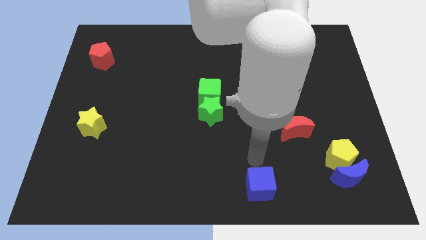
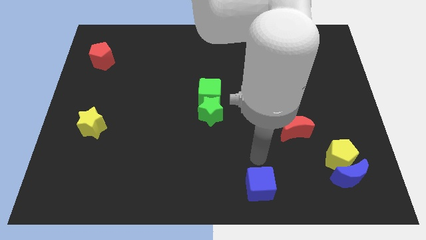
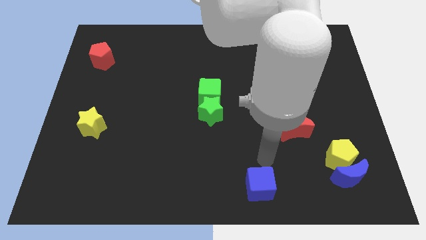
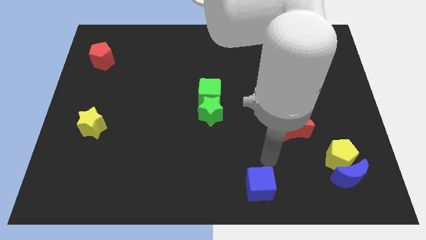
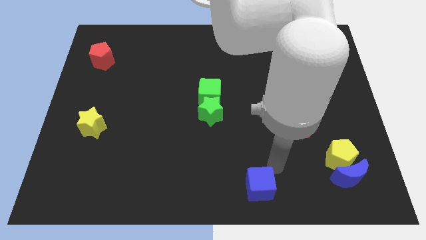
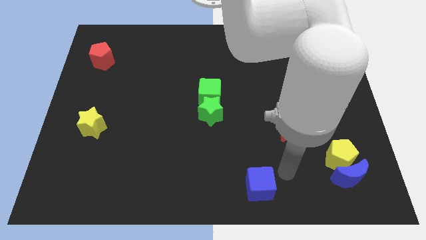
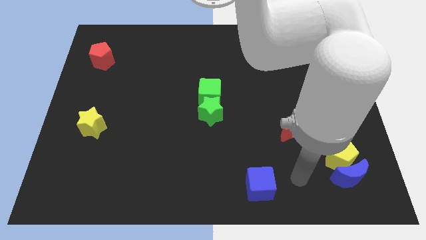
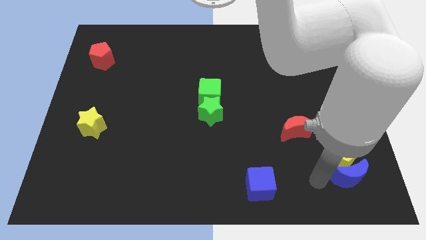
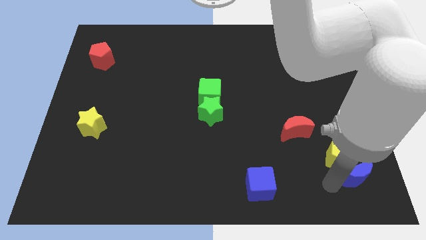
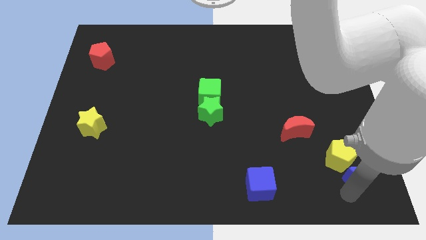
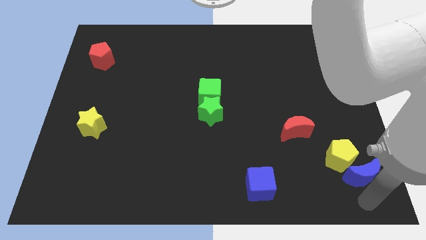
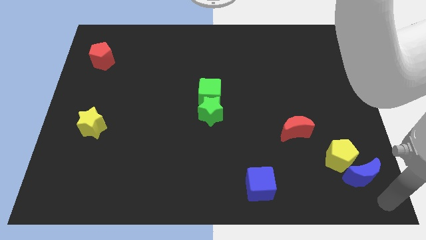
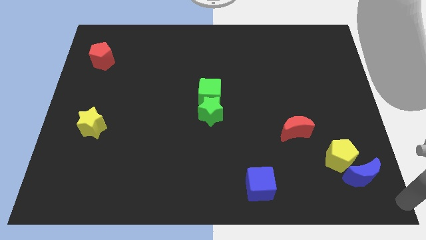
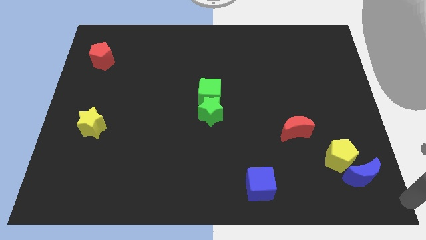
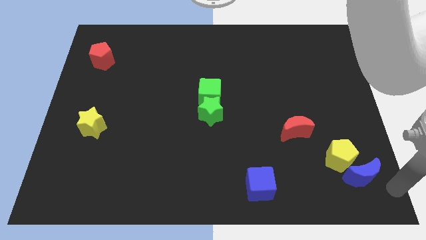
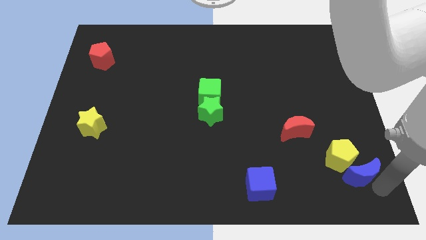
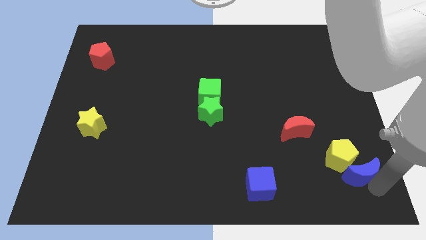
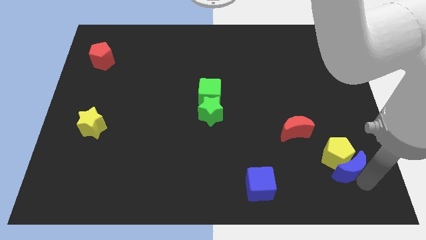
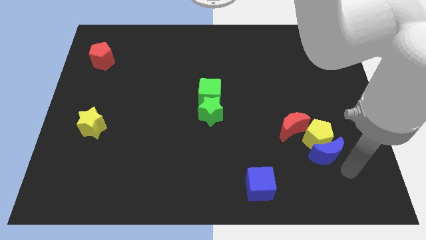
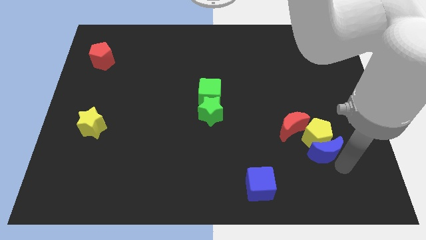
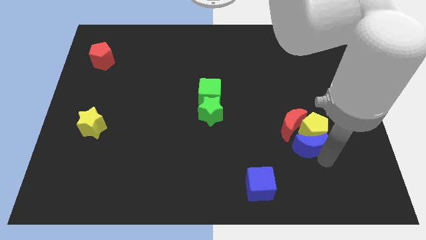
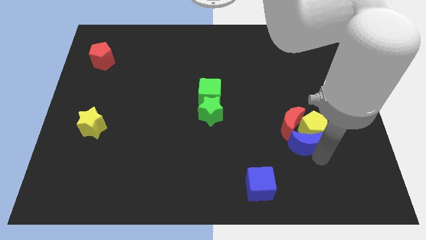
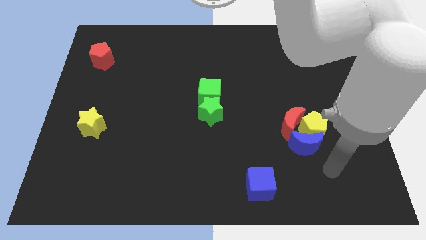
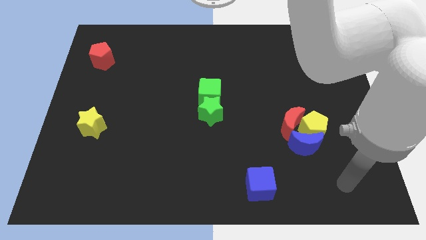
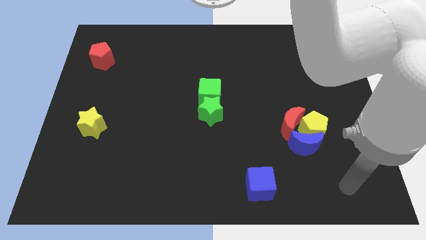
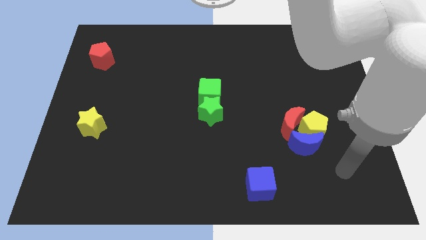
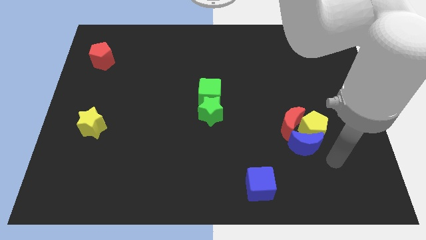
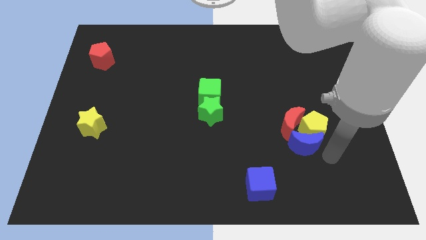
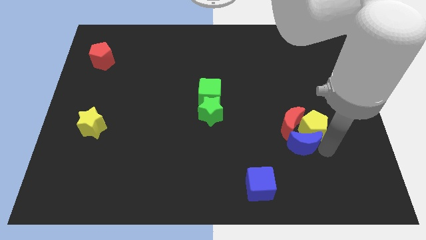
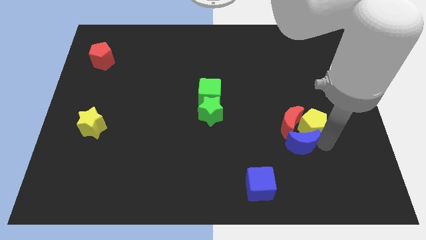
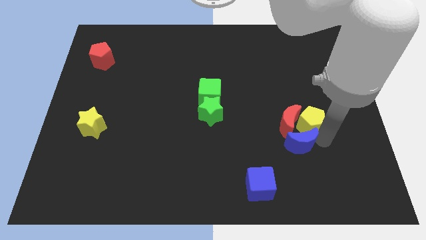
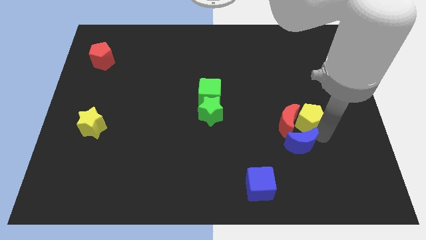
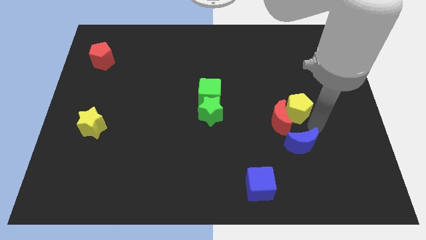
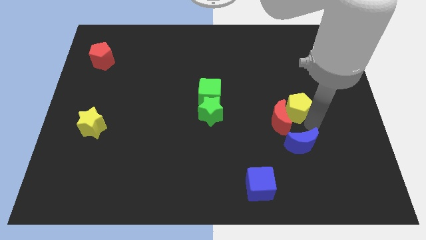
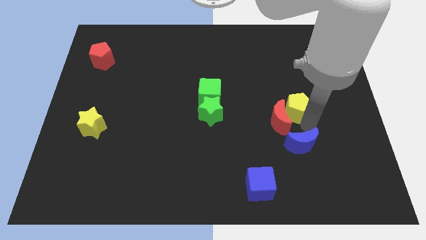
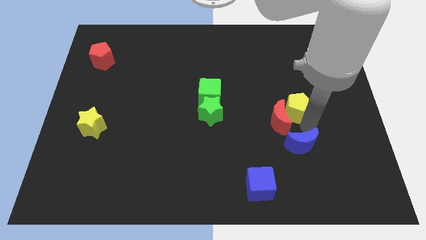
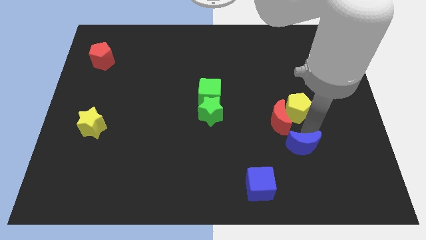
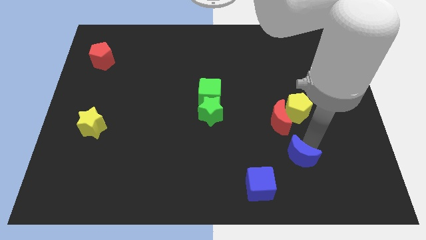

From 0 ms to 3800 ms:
push the blue crescent into the yellow pentagon

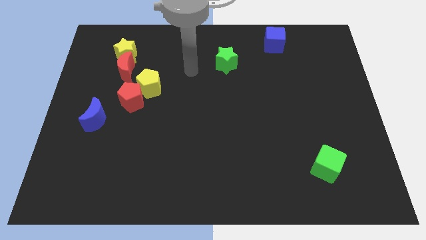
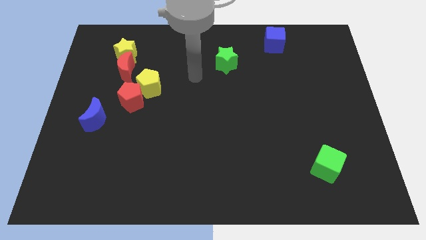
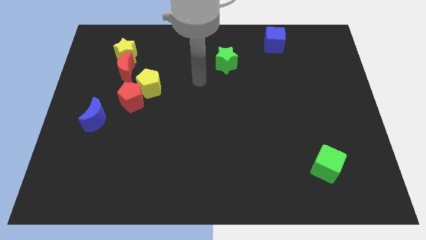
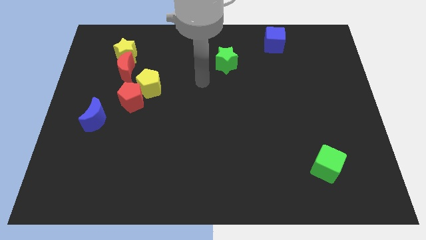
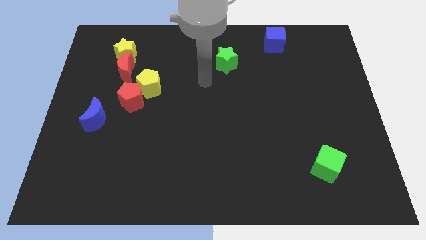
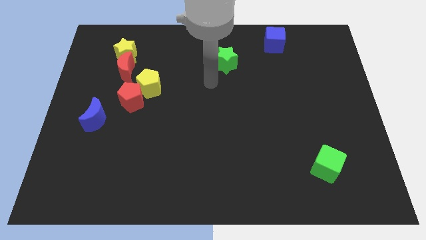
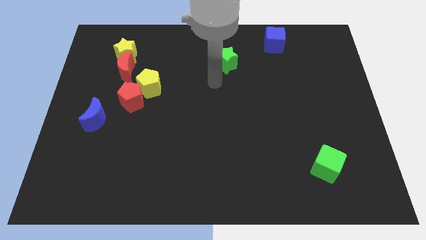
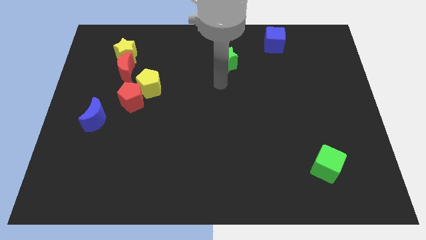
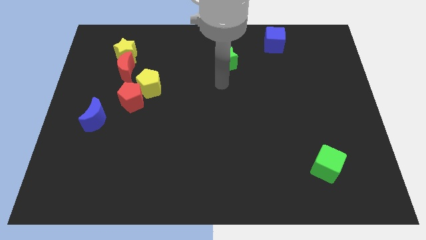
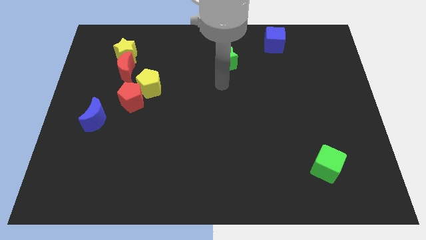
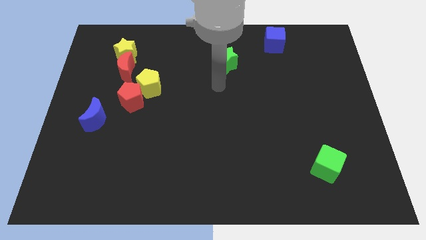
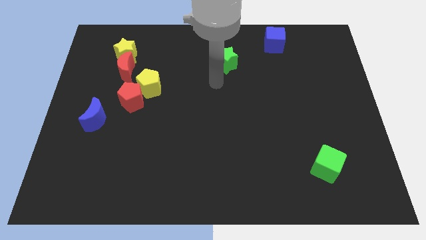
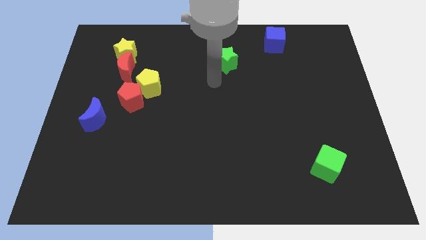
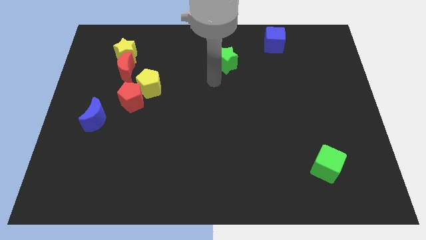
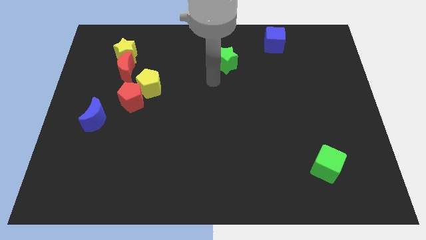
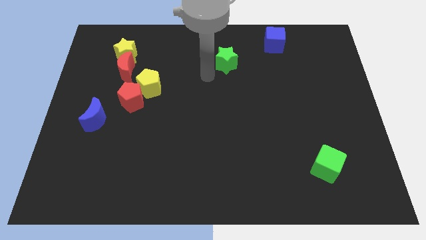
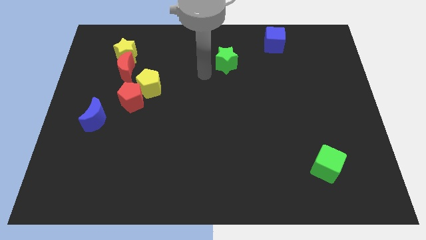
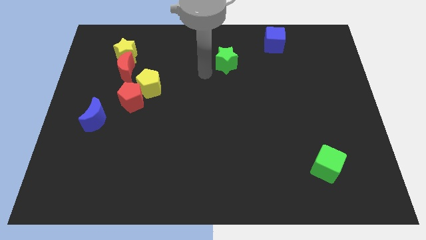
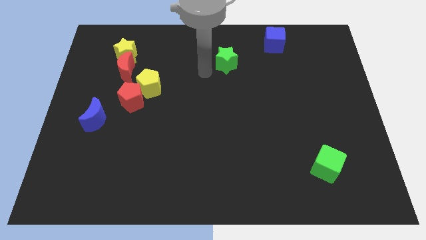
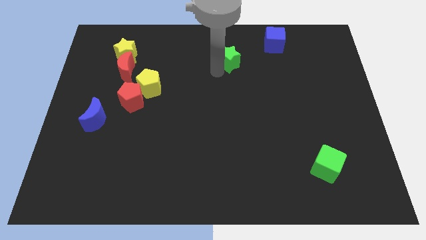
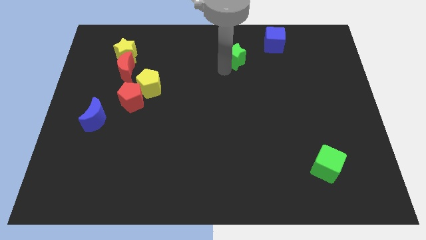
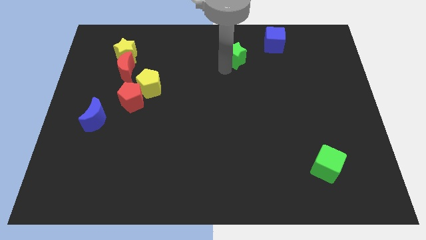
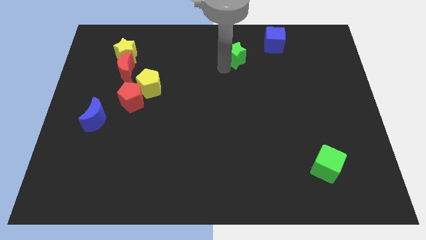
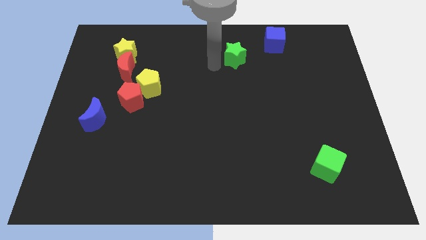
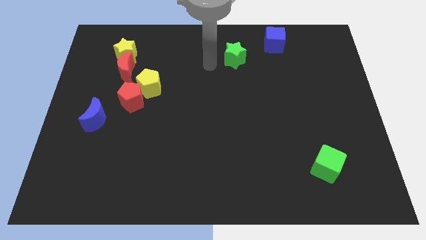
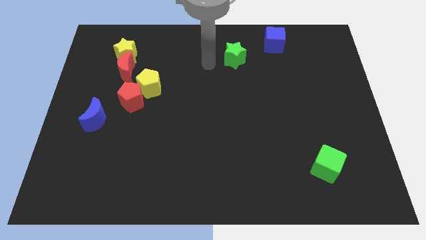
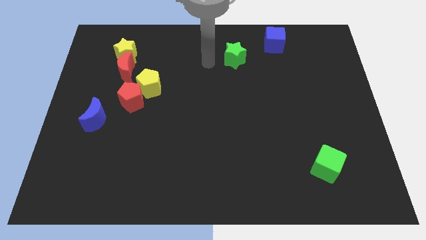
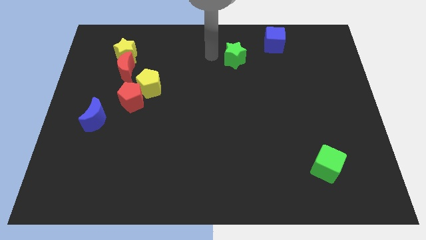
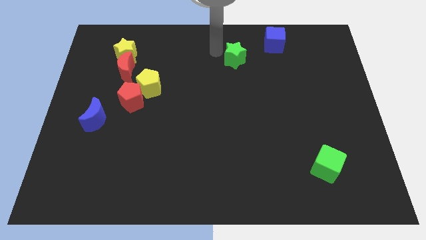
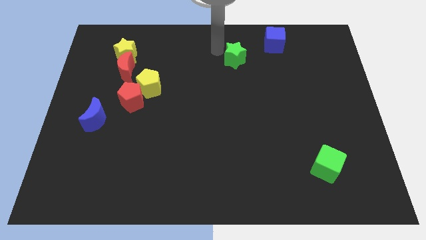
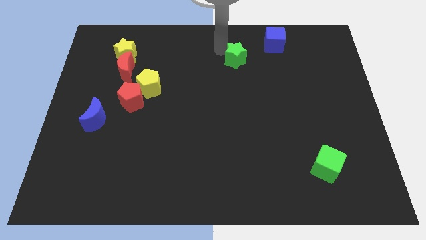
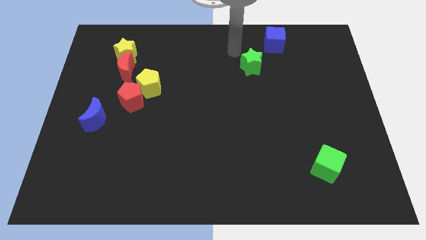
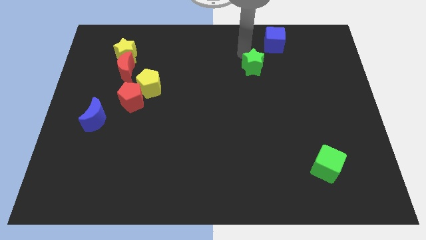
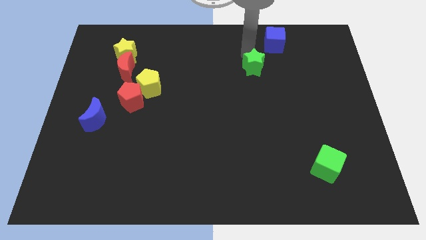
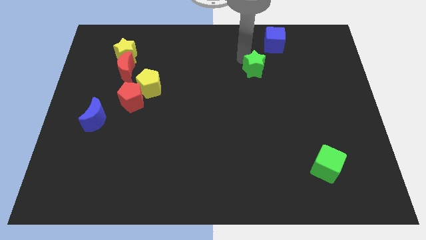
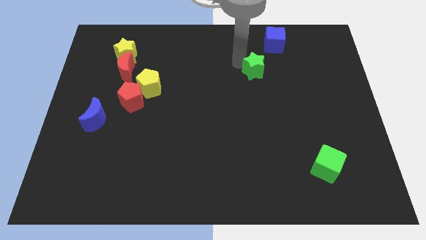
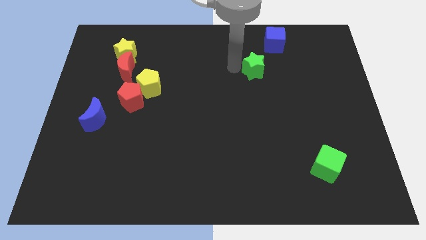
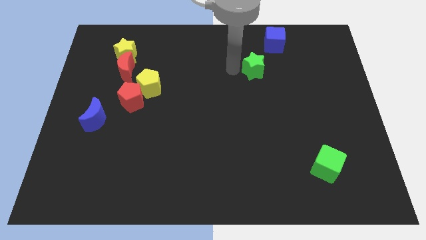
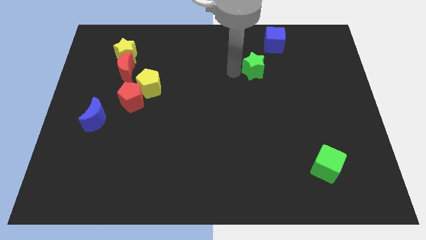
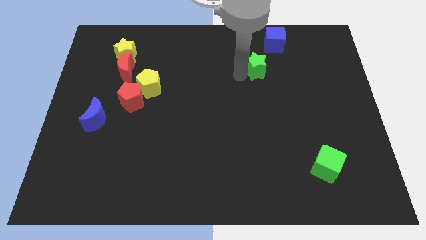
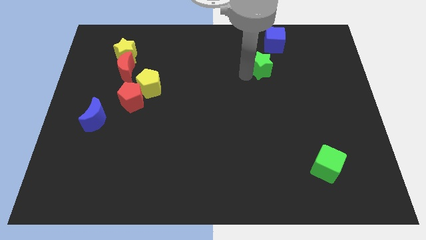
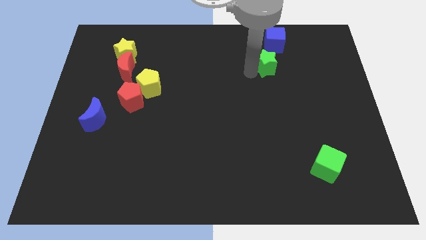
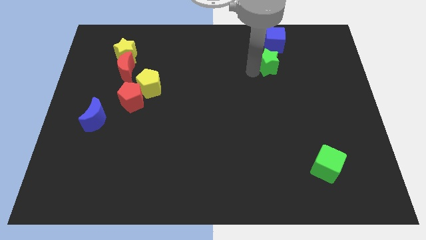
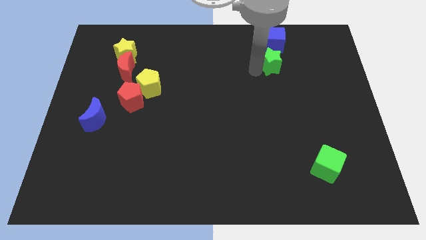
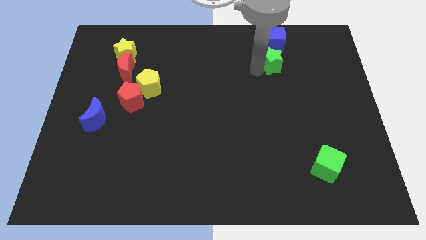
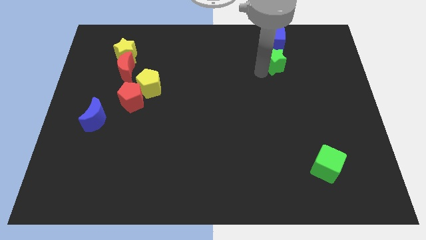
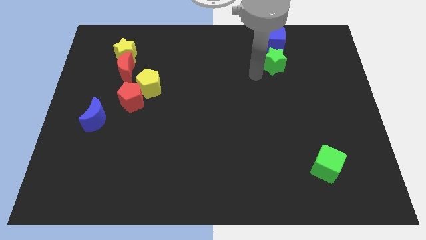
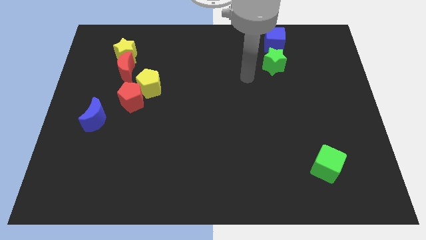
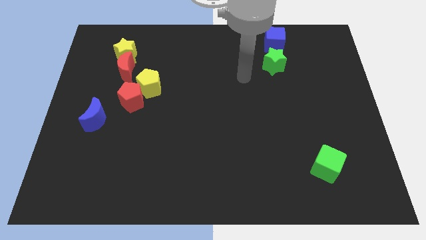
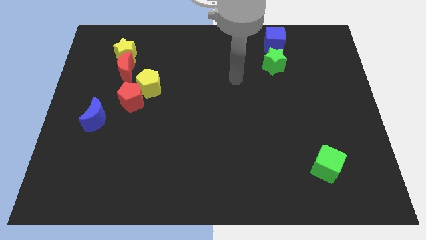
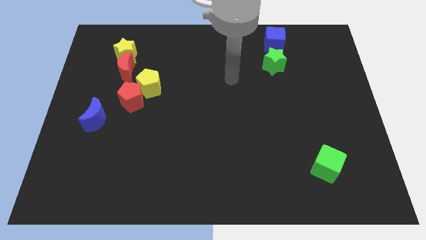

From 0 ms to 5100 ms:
push green star below the blue cube

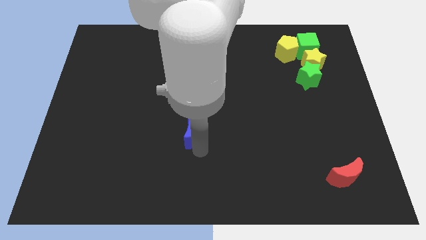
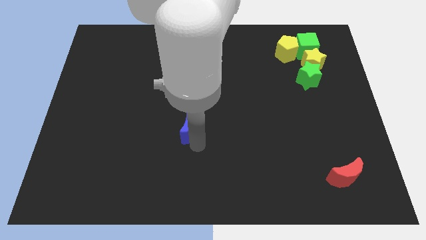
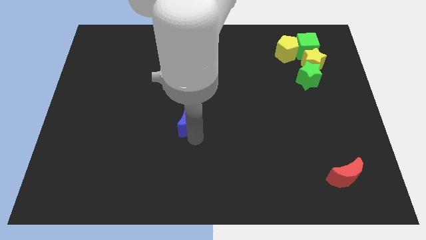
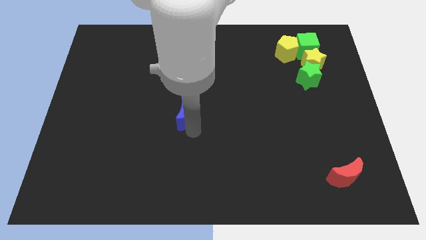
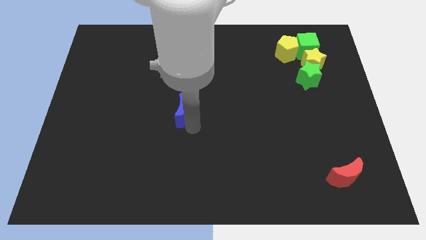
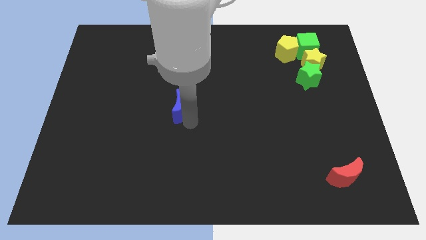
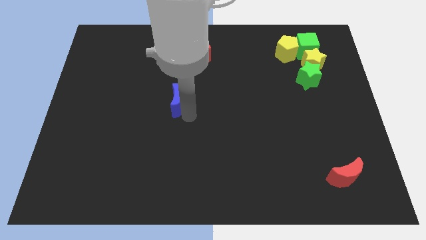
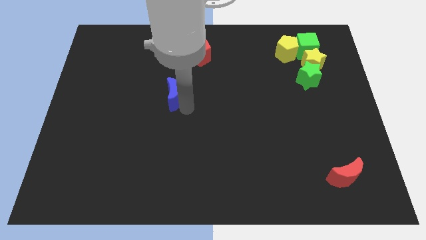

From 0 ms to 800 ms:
move the blue crescent to the top of the board
